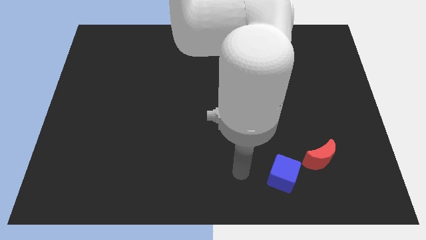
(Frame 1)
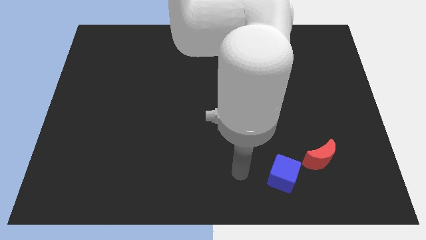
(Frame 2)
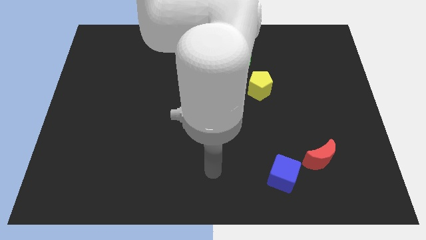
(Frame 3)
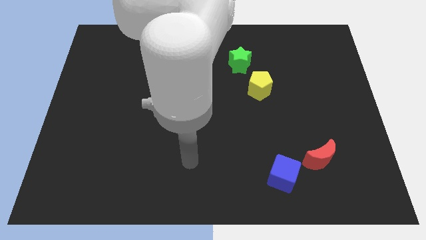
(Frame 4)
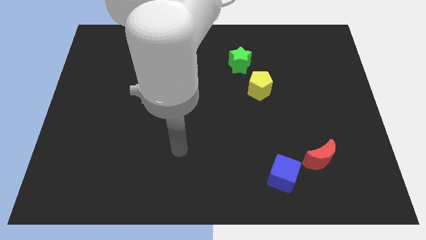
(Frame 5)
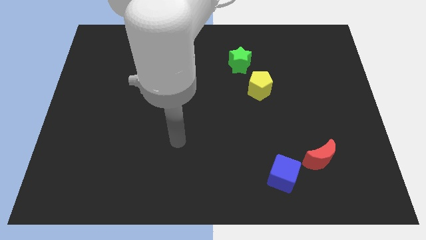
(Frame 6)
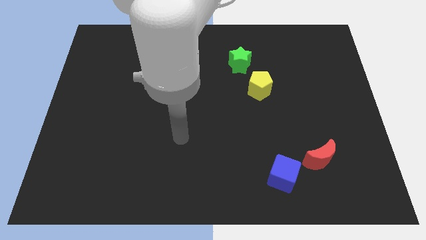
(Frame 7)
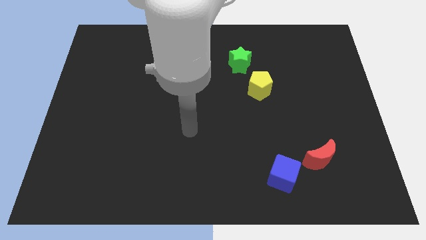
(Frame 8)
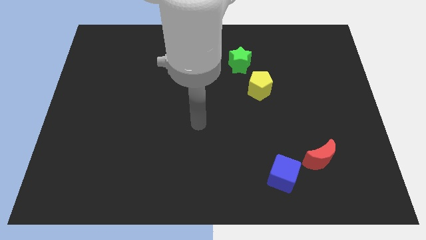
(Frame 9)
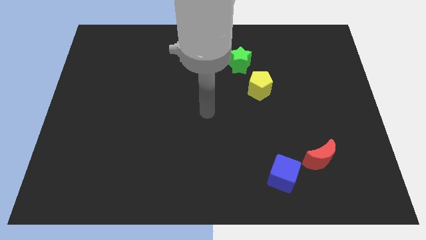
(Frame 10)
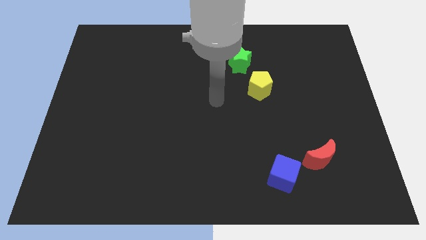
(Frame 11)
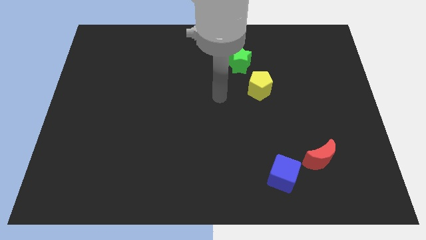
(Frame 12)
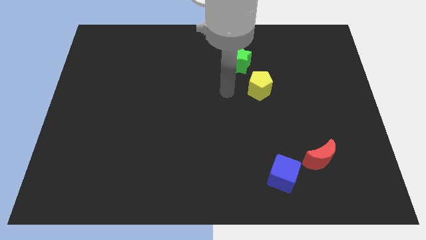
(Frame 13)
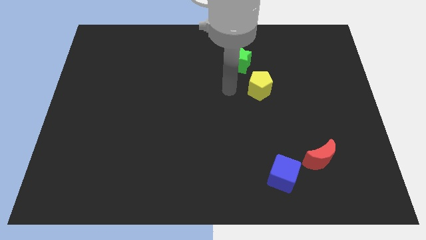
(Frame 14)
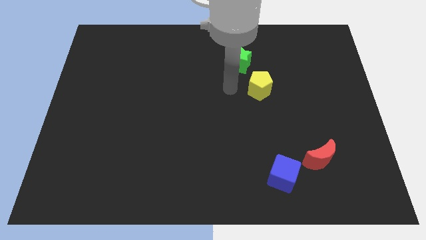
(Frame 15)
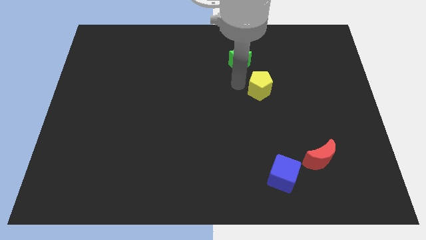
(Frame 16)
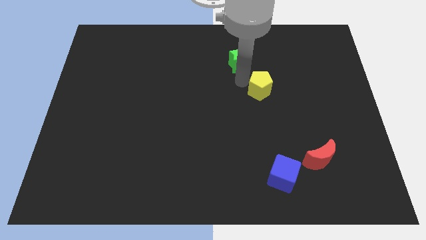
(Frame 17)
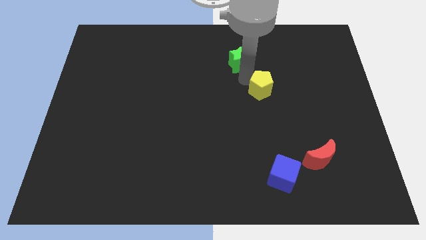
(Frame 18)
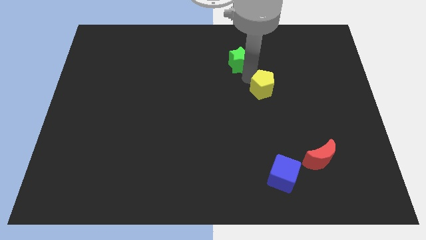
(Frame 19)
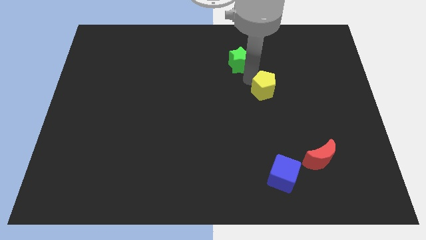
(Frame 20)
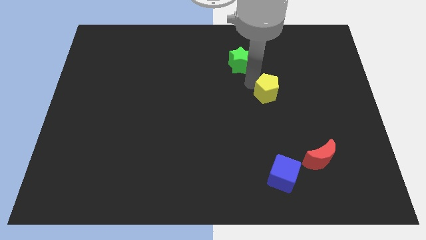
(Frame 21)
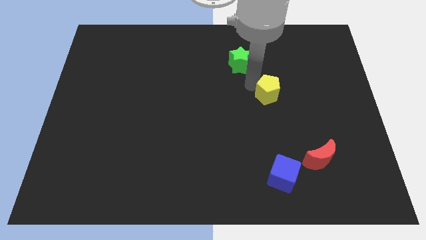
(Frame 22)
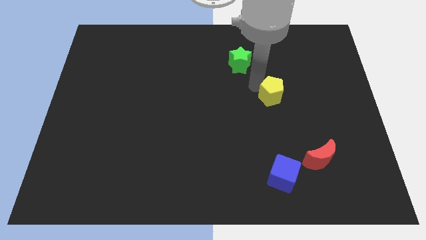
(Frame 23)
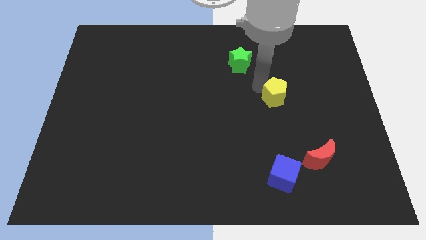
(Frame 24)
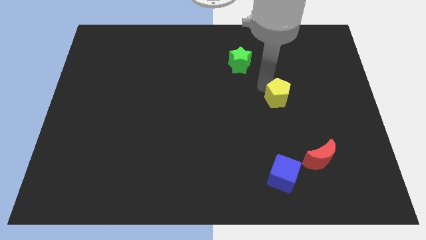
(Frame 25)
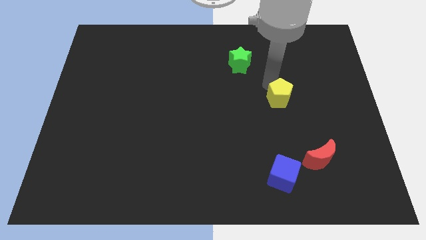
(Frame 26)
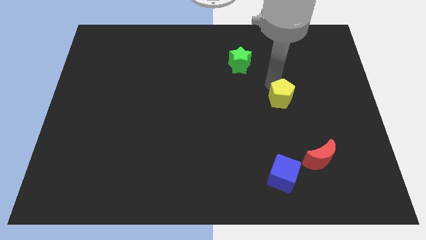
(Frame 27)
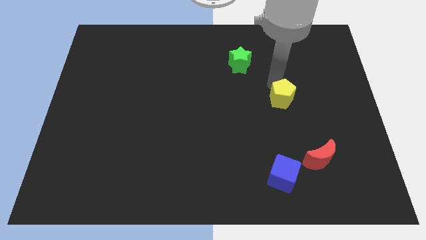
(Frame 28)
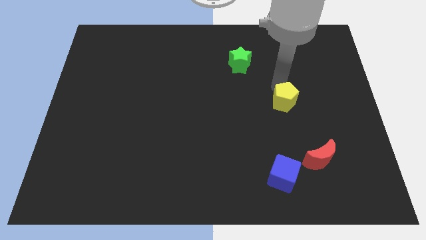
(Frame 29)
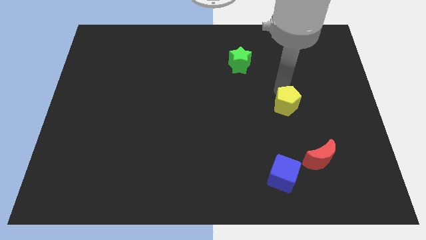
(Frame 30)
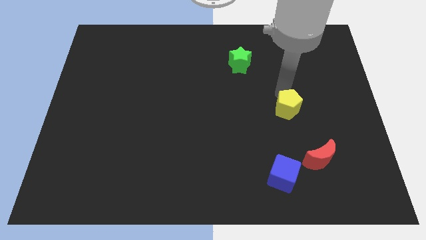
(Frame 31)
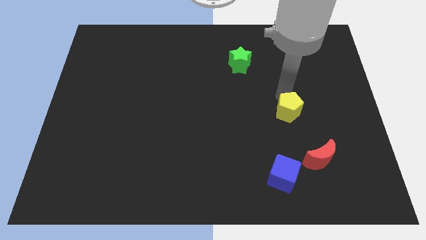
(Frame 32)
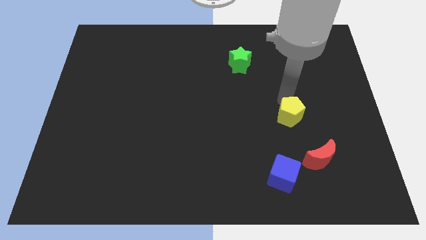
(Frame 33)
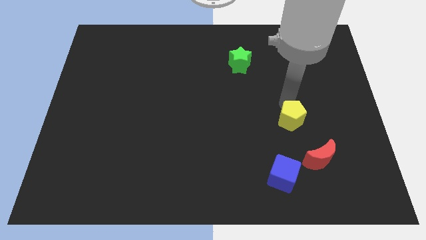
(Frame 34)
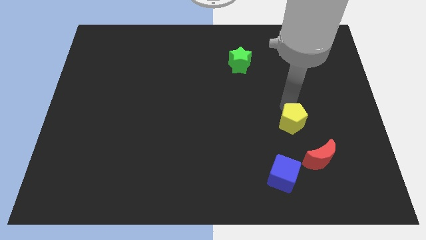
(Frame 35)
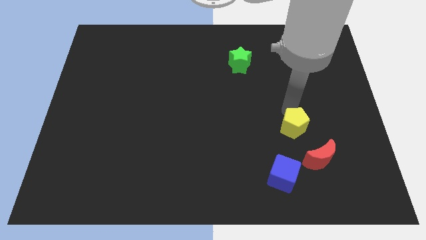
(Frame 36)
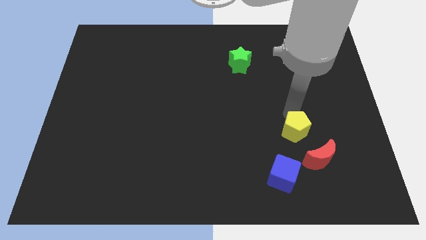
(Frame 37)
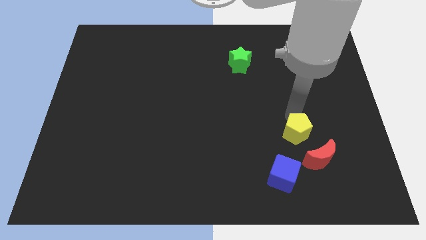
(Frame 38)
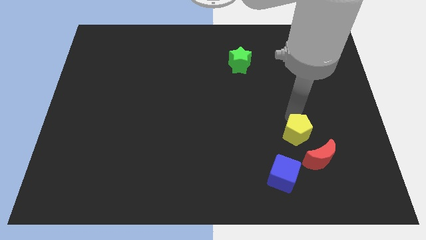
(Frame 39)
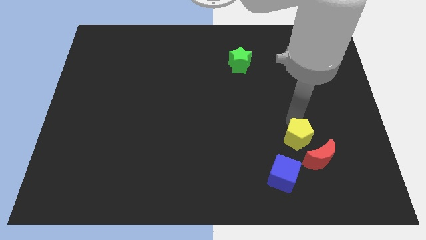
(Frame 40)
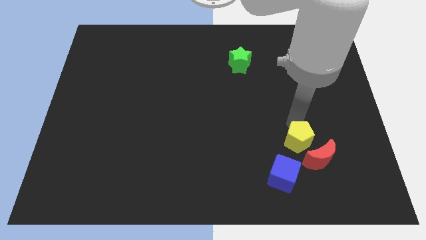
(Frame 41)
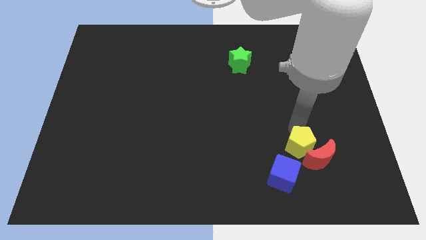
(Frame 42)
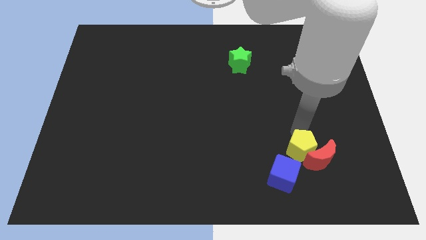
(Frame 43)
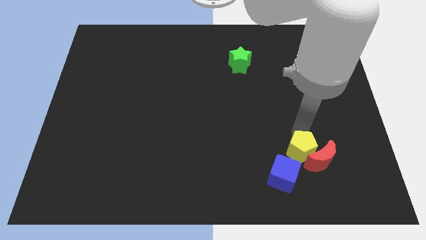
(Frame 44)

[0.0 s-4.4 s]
move the yellow pentagon next to the red moon

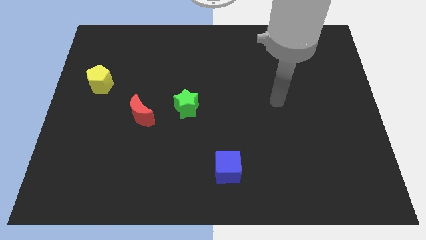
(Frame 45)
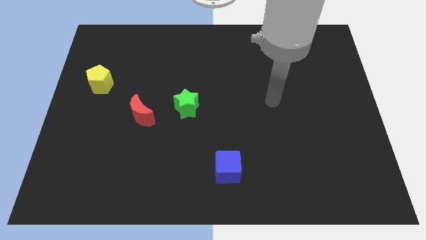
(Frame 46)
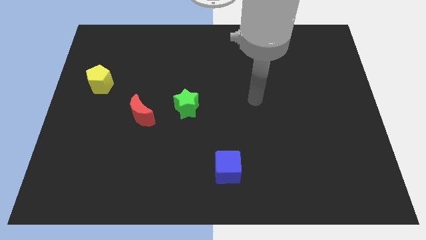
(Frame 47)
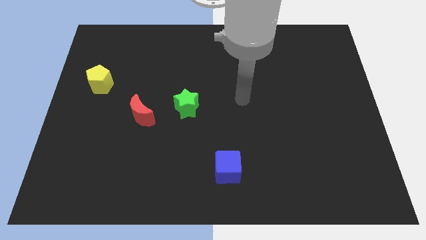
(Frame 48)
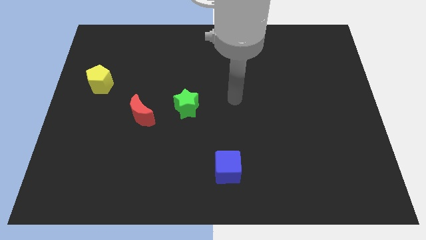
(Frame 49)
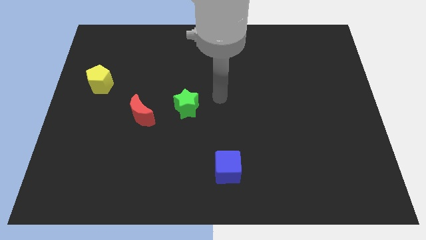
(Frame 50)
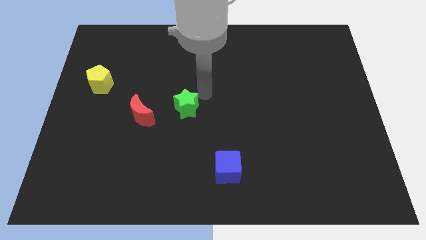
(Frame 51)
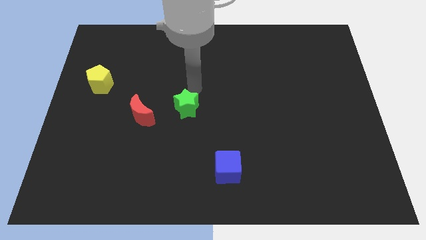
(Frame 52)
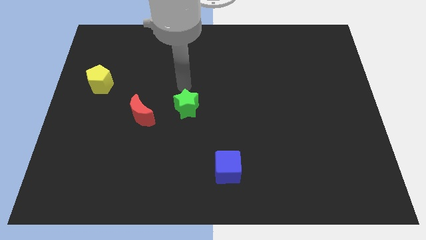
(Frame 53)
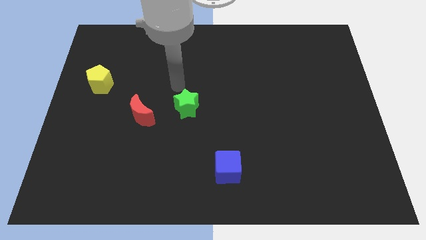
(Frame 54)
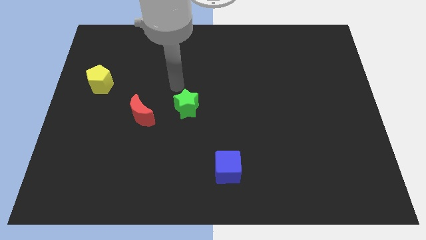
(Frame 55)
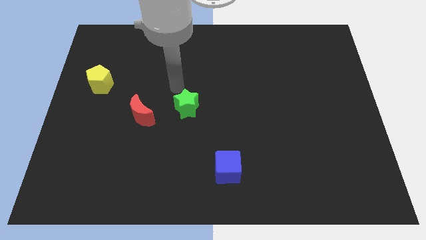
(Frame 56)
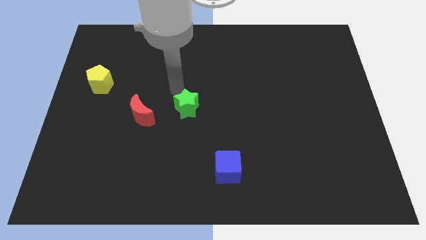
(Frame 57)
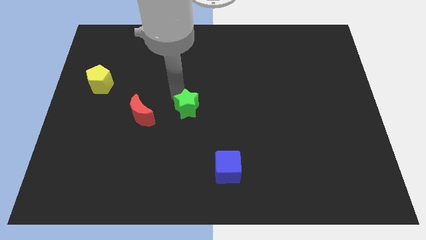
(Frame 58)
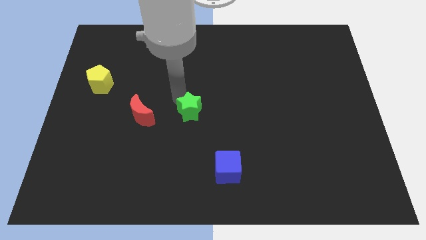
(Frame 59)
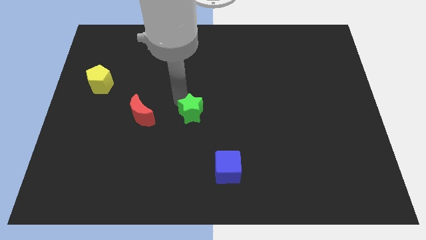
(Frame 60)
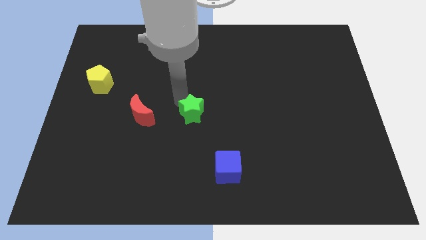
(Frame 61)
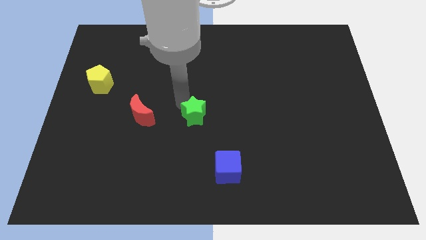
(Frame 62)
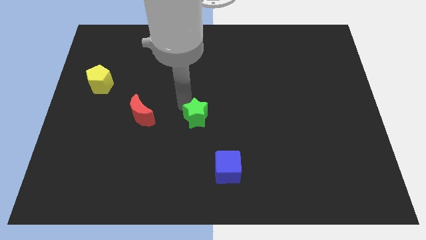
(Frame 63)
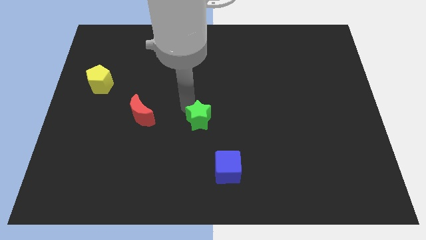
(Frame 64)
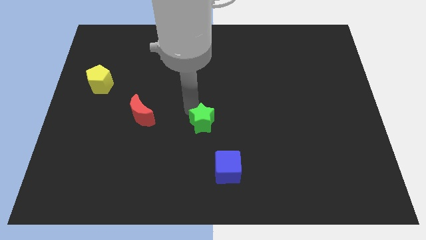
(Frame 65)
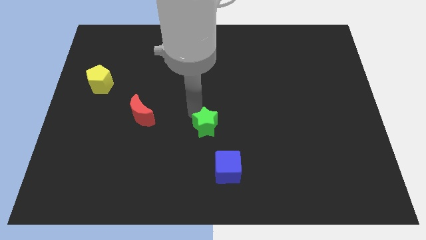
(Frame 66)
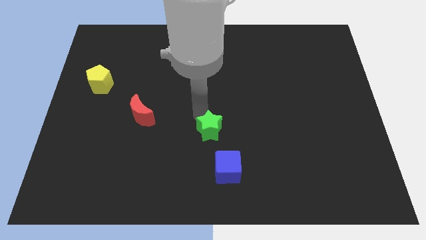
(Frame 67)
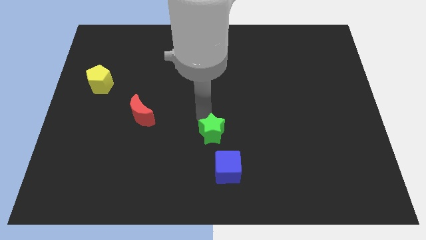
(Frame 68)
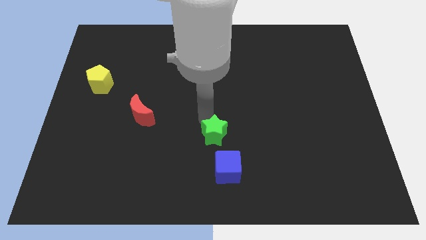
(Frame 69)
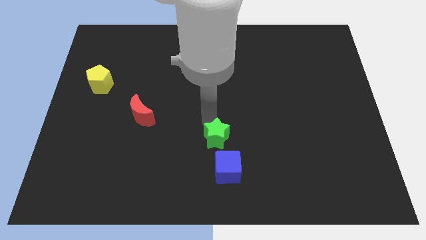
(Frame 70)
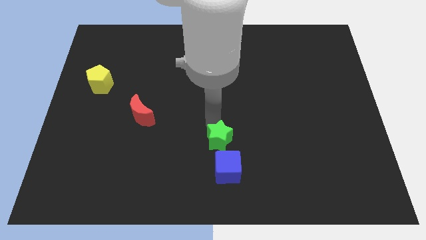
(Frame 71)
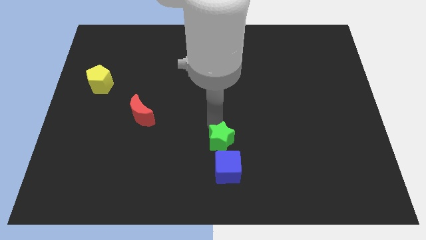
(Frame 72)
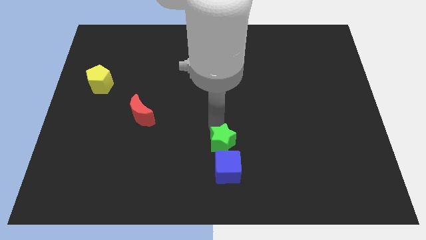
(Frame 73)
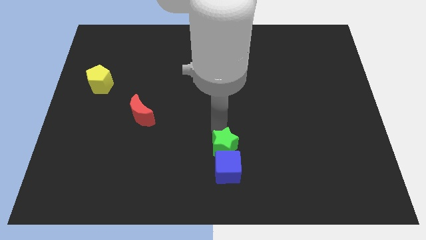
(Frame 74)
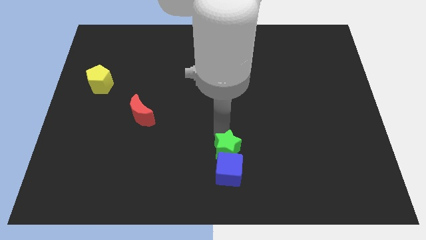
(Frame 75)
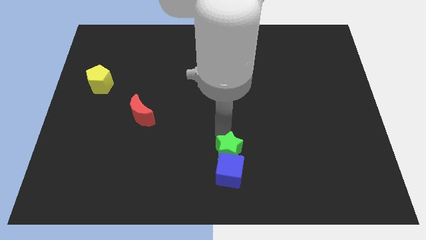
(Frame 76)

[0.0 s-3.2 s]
slide the green star to the blue cube

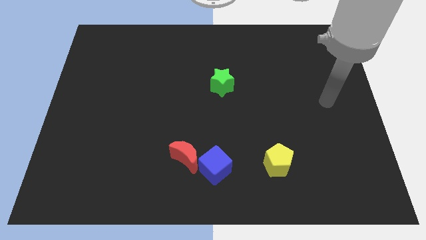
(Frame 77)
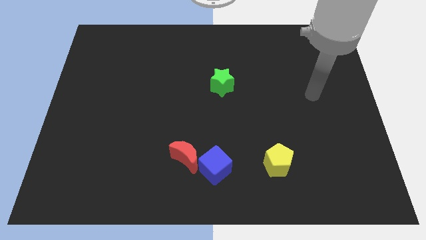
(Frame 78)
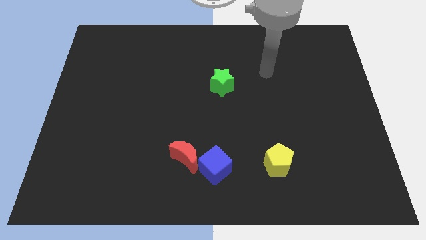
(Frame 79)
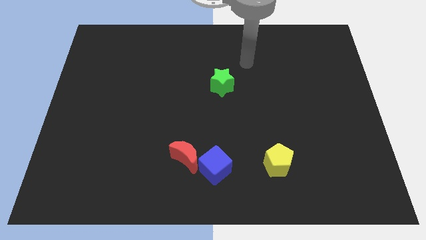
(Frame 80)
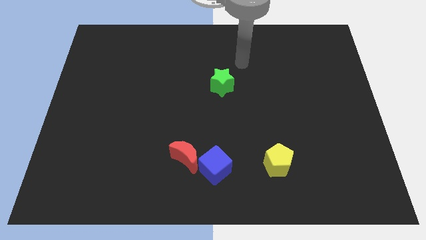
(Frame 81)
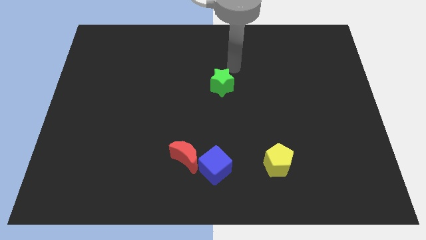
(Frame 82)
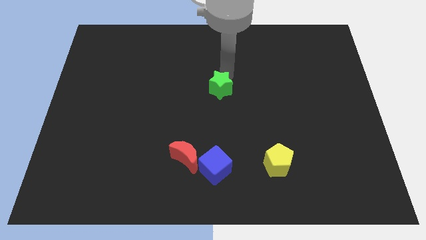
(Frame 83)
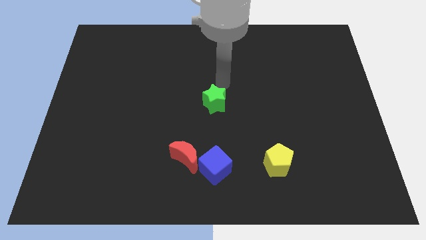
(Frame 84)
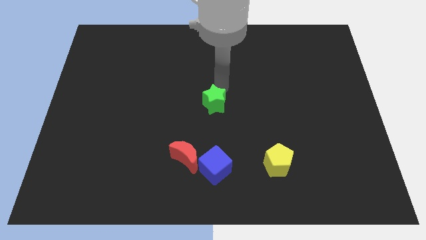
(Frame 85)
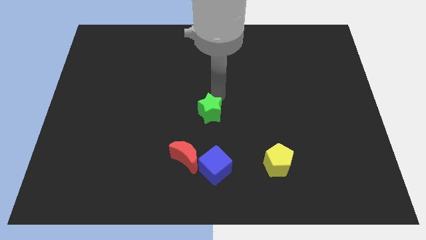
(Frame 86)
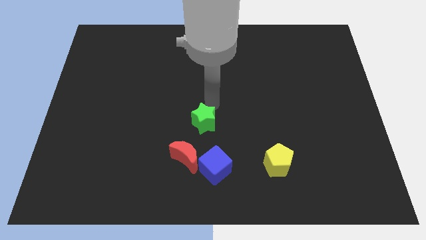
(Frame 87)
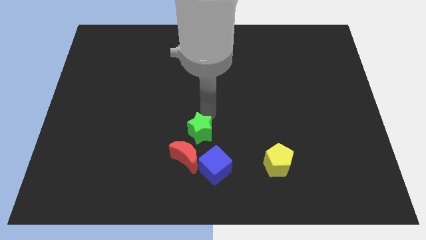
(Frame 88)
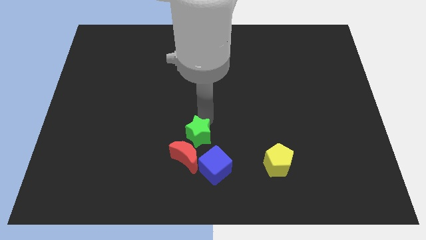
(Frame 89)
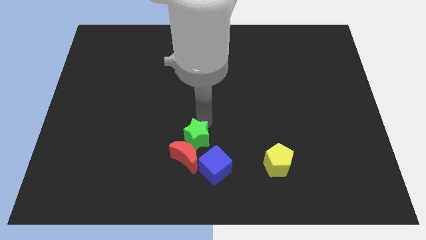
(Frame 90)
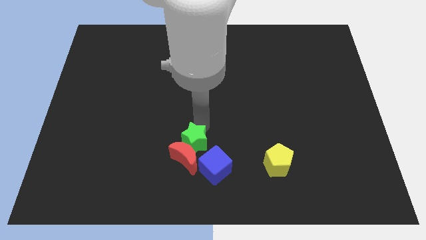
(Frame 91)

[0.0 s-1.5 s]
push the star next to the red moon
